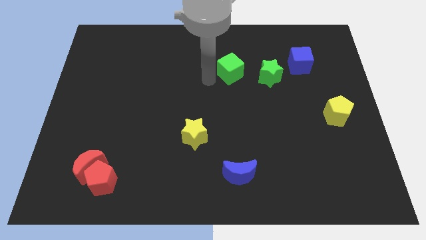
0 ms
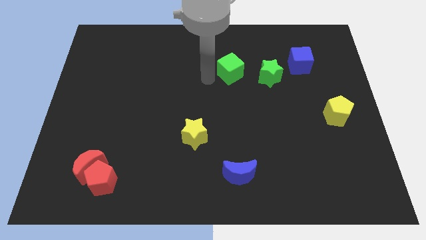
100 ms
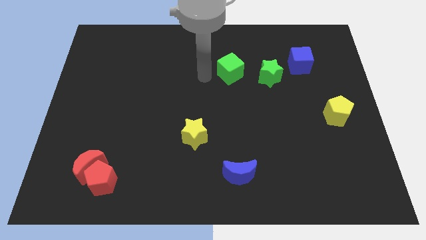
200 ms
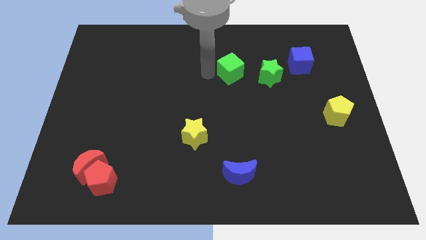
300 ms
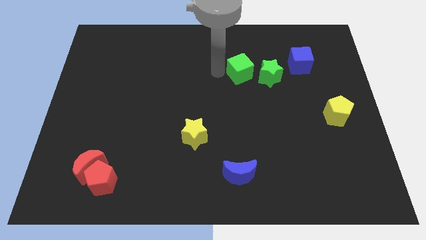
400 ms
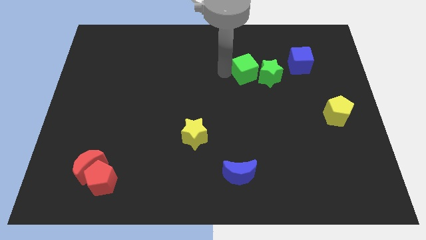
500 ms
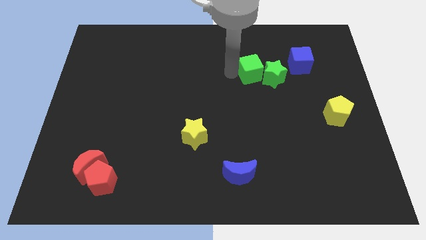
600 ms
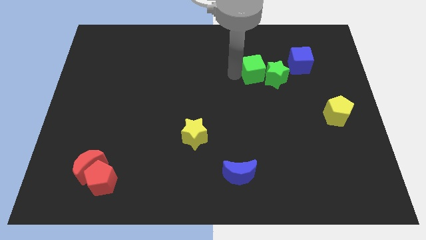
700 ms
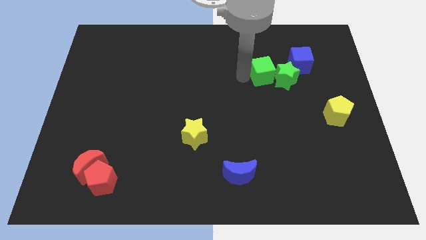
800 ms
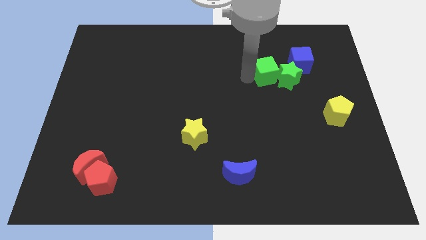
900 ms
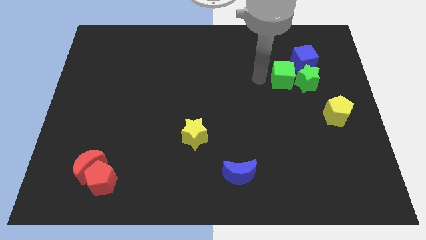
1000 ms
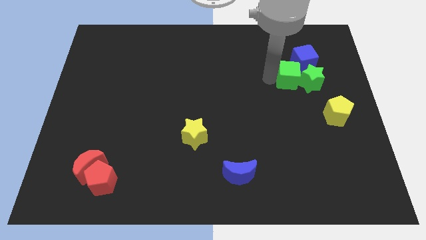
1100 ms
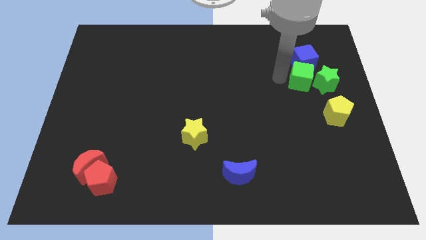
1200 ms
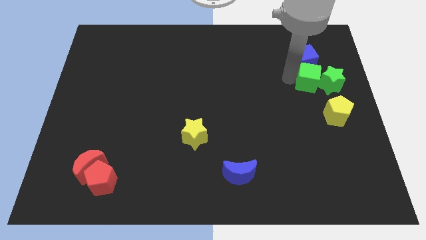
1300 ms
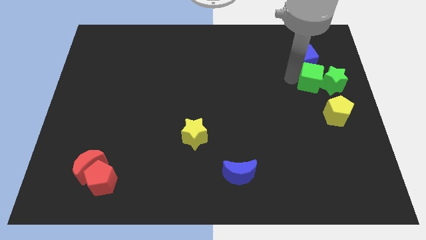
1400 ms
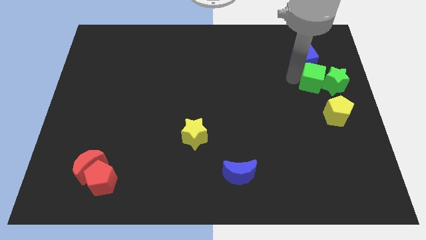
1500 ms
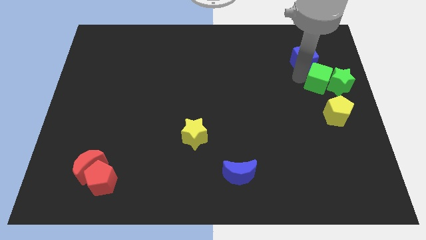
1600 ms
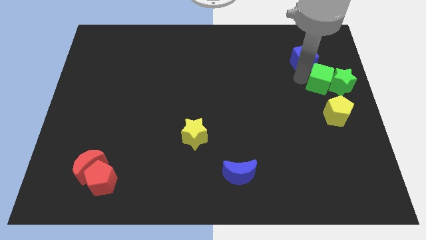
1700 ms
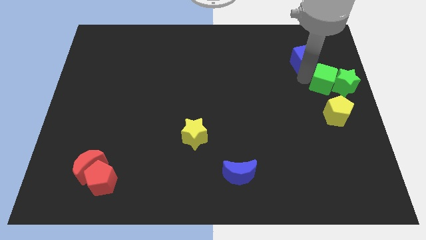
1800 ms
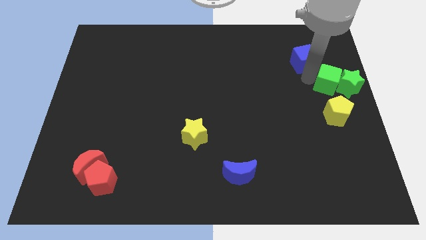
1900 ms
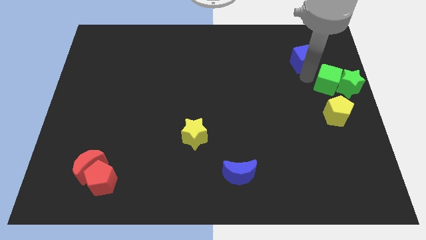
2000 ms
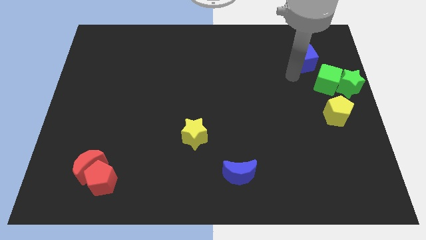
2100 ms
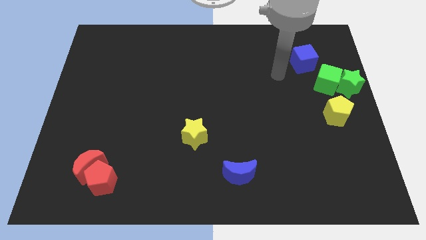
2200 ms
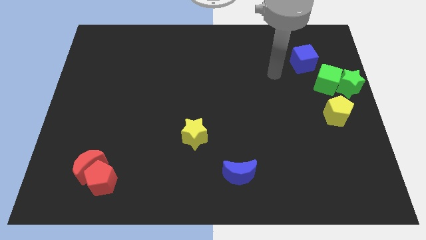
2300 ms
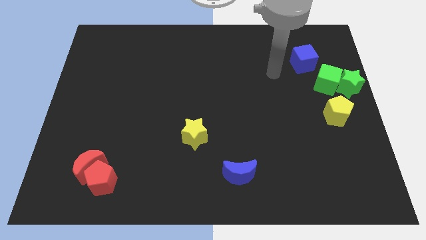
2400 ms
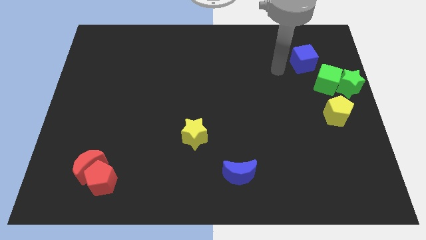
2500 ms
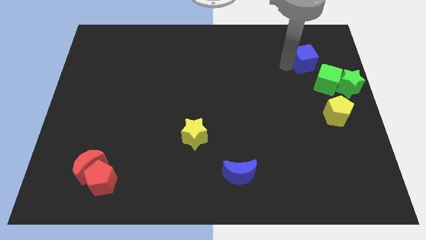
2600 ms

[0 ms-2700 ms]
drag the green star with the help of green cube to the right side of the board

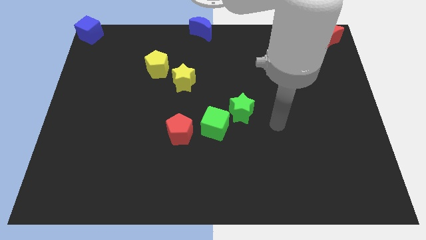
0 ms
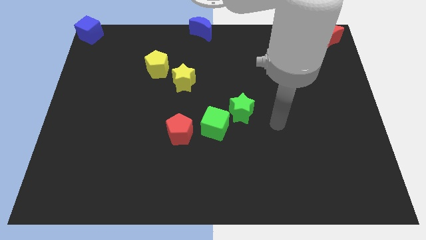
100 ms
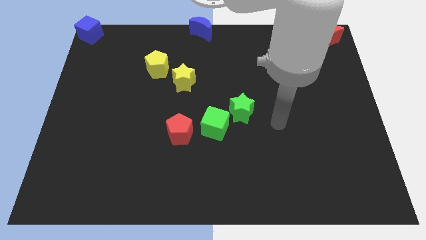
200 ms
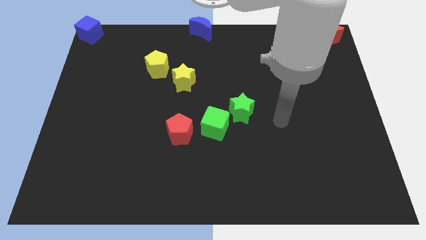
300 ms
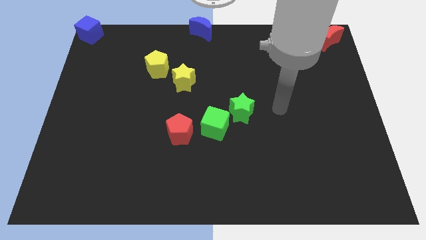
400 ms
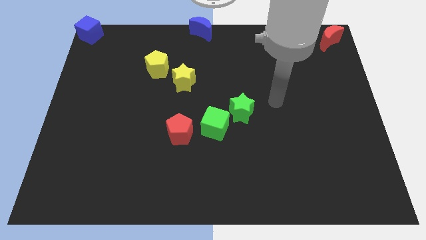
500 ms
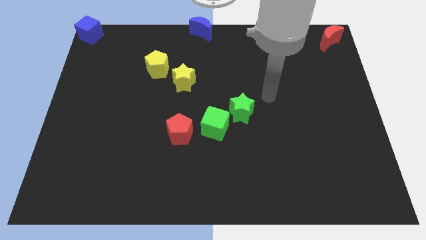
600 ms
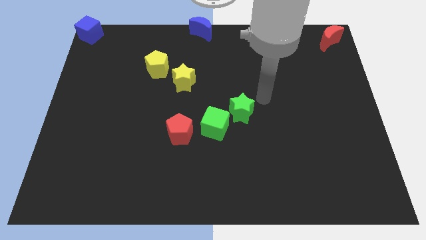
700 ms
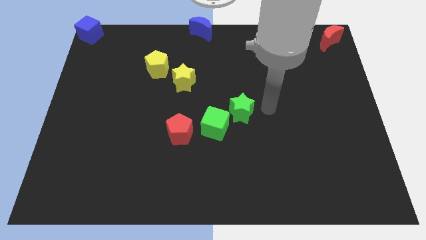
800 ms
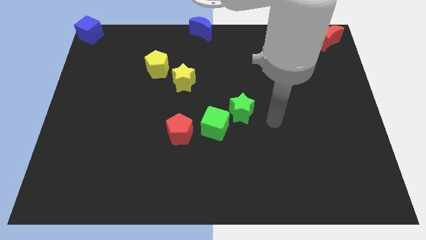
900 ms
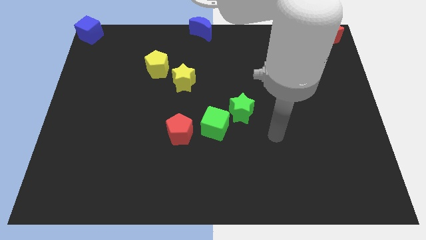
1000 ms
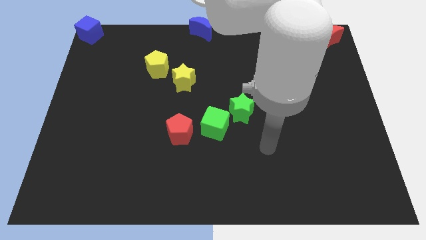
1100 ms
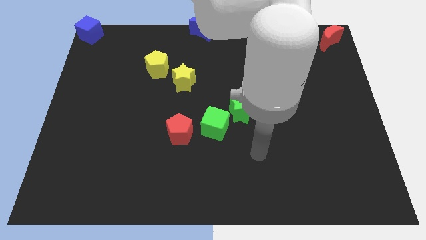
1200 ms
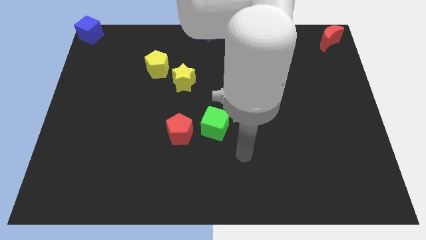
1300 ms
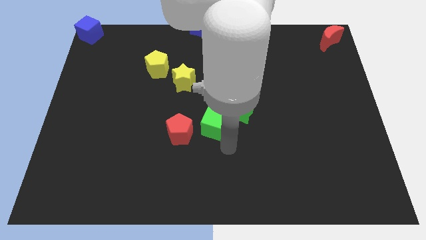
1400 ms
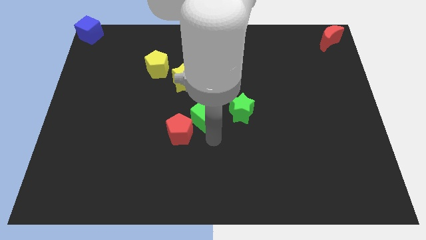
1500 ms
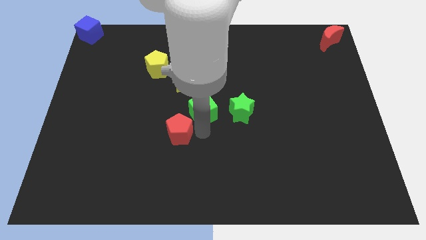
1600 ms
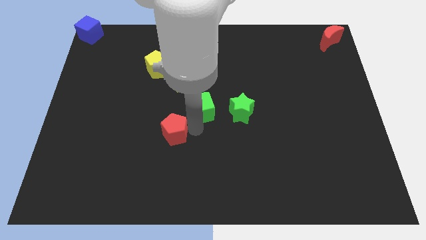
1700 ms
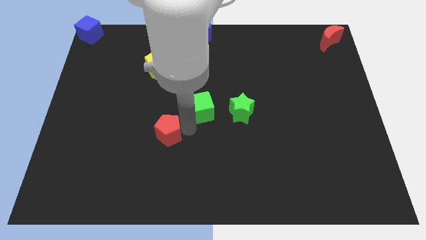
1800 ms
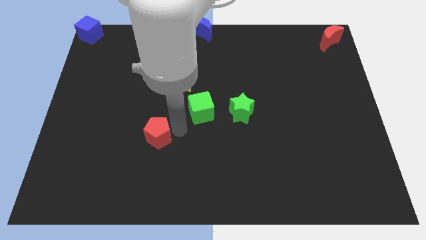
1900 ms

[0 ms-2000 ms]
place the green cube below right to the yellow star

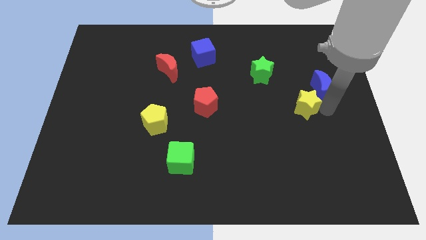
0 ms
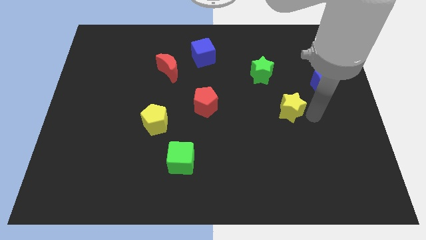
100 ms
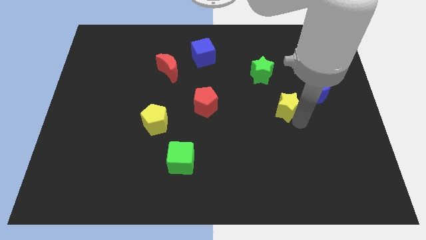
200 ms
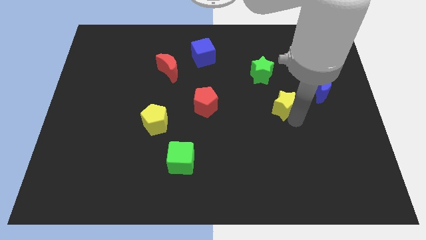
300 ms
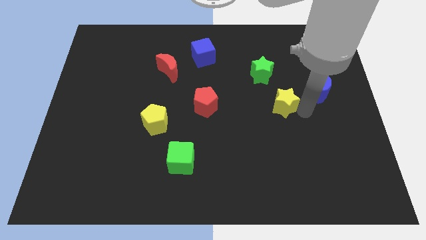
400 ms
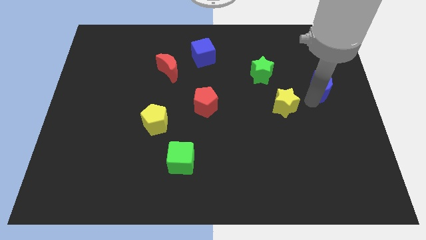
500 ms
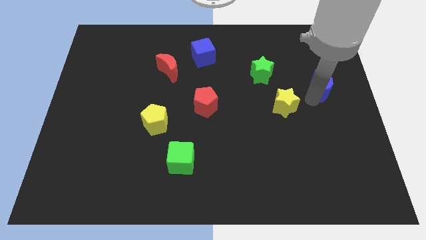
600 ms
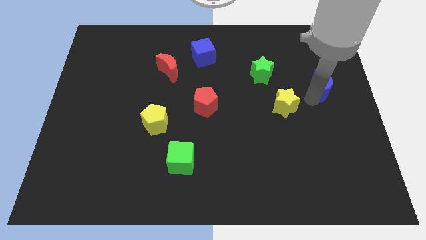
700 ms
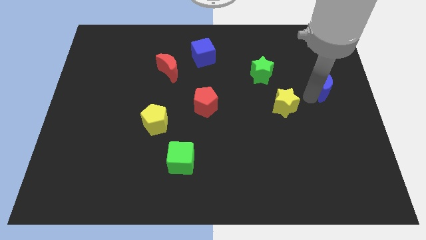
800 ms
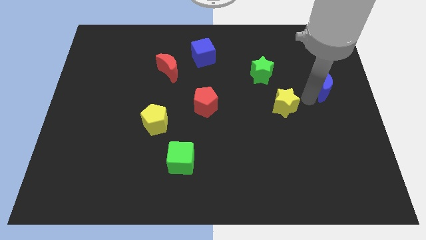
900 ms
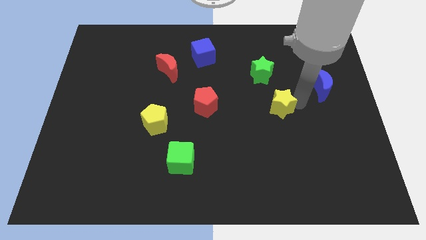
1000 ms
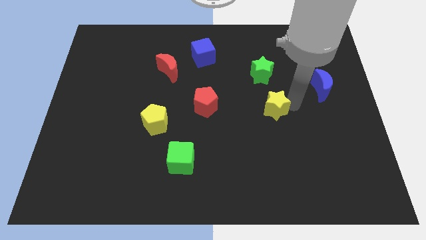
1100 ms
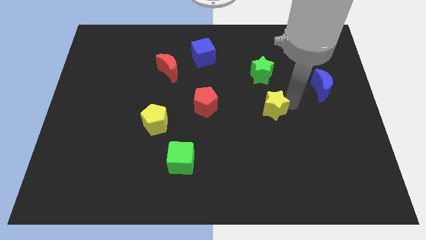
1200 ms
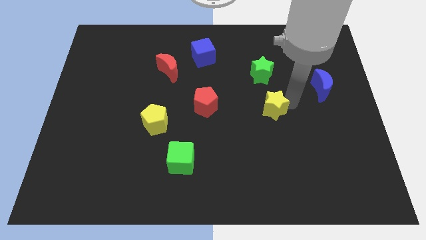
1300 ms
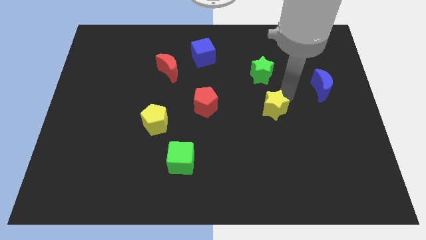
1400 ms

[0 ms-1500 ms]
separate the yellow star from the blue crescent

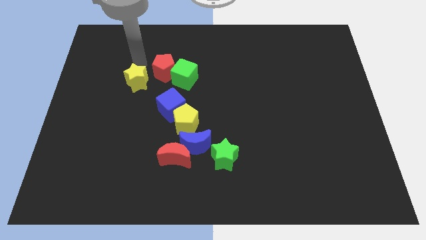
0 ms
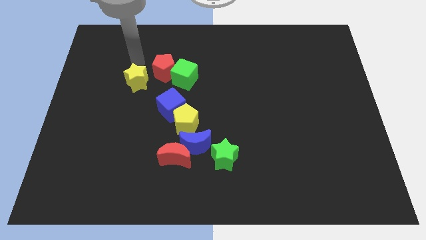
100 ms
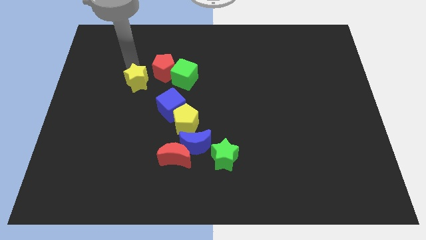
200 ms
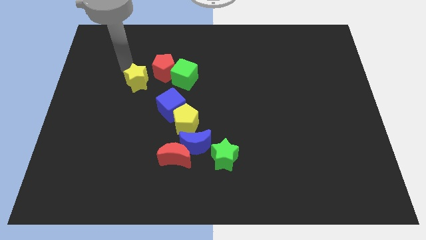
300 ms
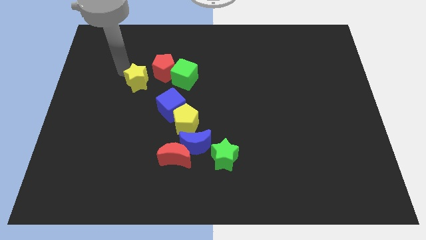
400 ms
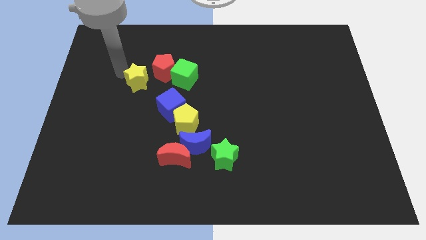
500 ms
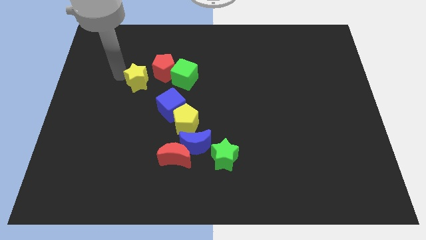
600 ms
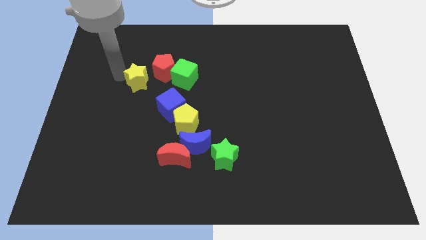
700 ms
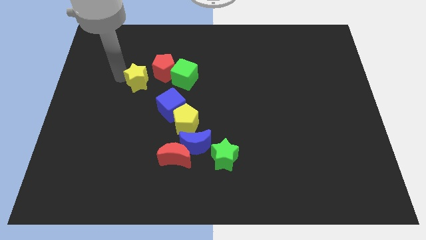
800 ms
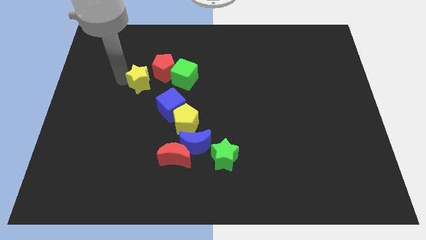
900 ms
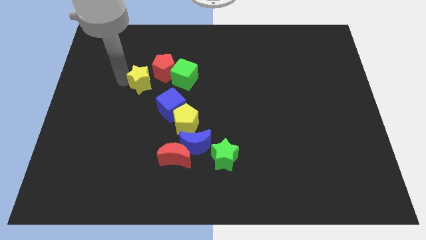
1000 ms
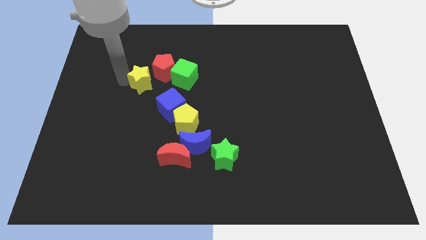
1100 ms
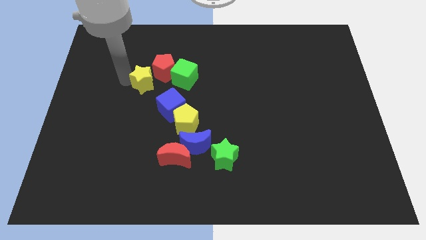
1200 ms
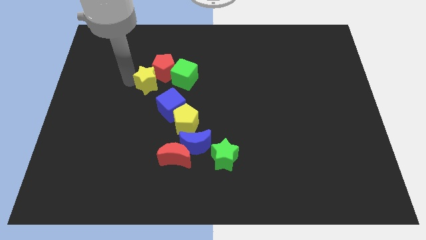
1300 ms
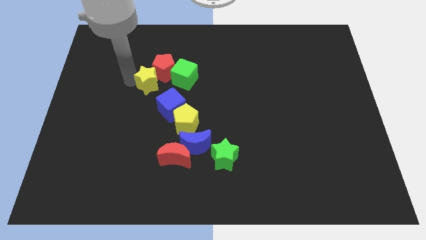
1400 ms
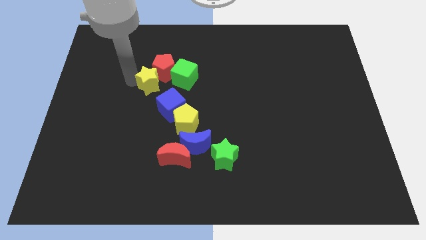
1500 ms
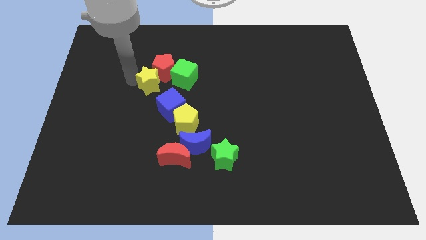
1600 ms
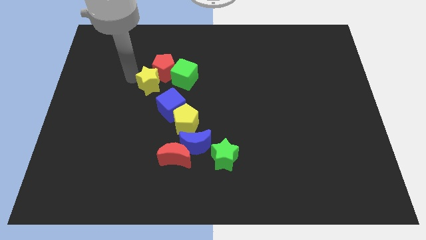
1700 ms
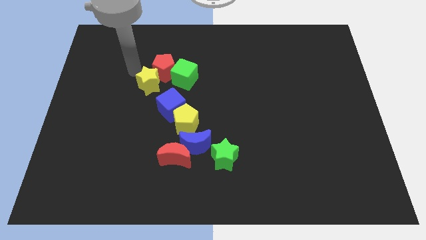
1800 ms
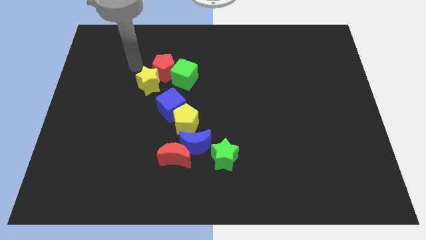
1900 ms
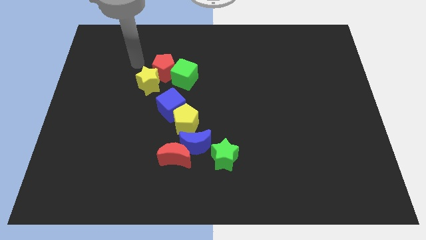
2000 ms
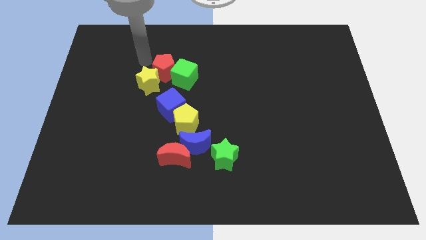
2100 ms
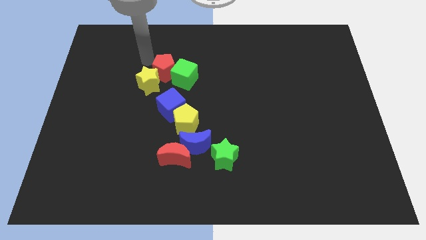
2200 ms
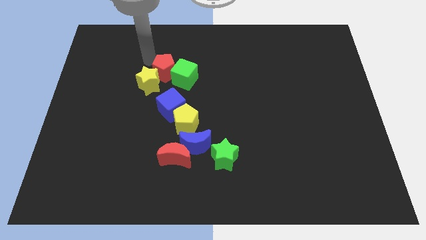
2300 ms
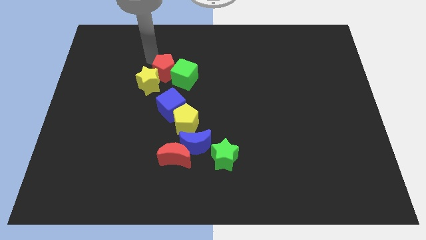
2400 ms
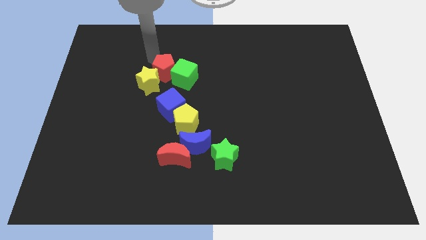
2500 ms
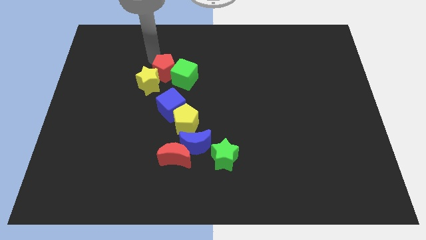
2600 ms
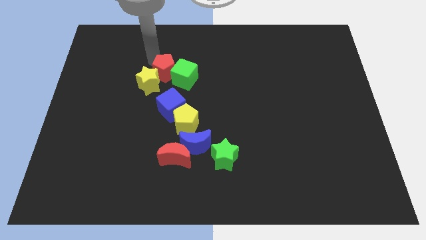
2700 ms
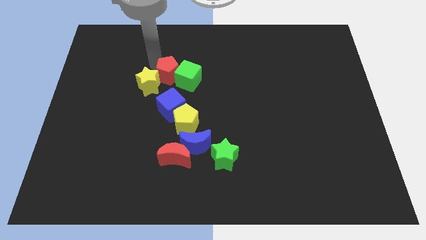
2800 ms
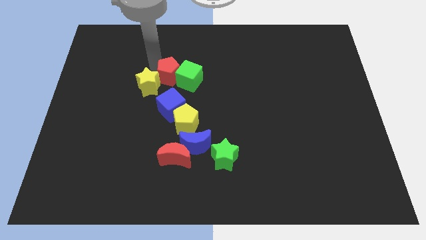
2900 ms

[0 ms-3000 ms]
place yellow star below red pentagon
